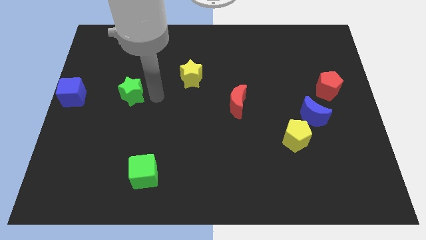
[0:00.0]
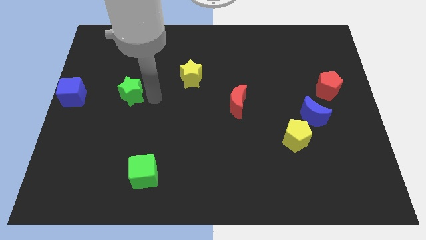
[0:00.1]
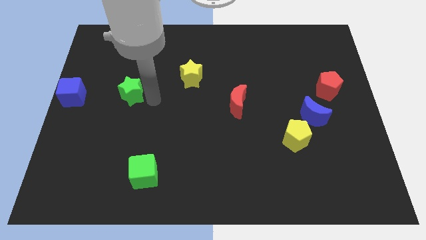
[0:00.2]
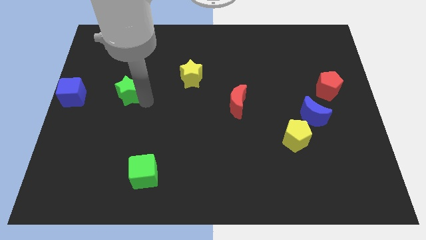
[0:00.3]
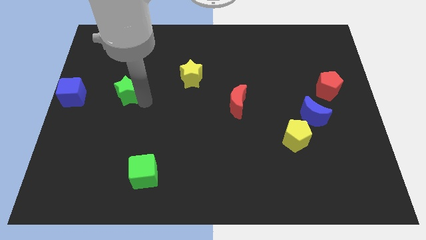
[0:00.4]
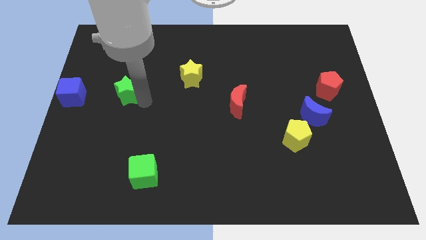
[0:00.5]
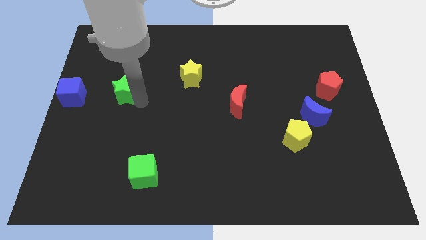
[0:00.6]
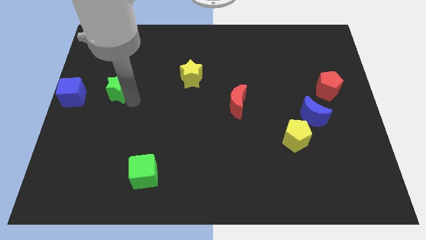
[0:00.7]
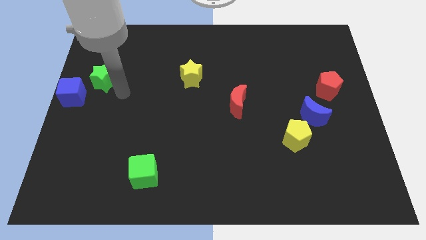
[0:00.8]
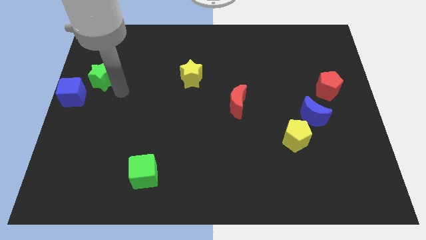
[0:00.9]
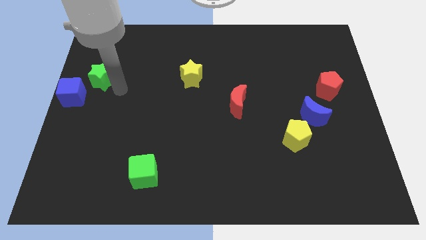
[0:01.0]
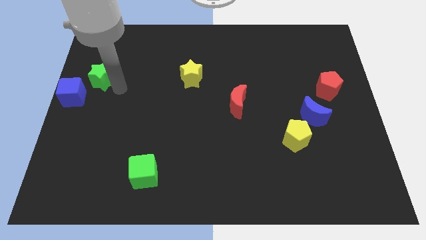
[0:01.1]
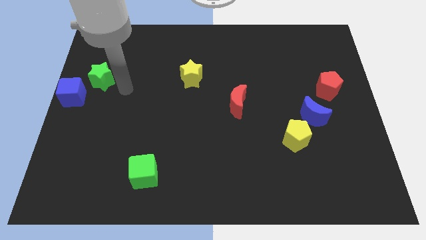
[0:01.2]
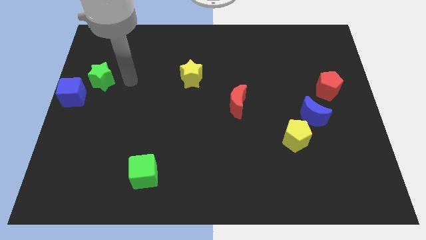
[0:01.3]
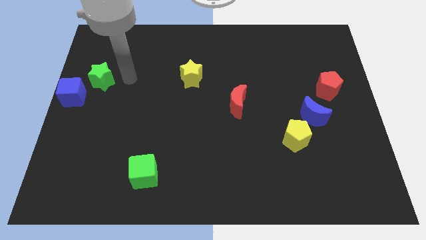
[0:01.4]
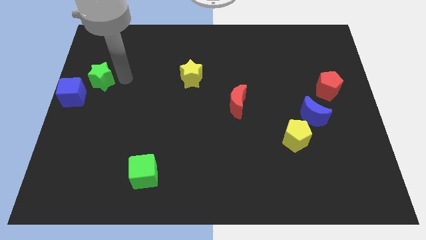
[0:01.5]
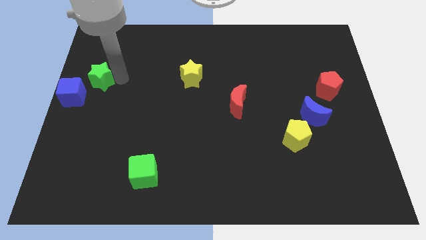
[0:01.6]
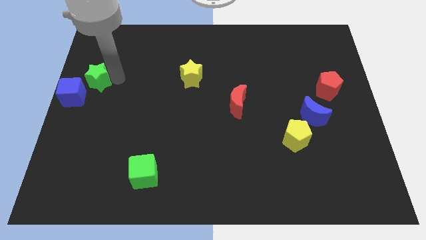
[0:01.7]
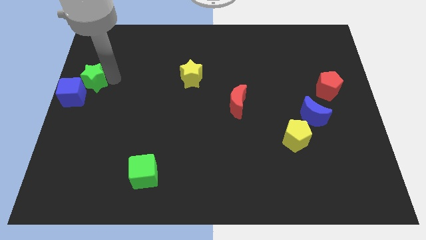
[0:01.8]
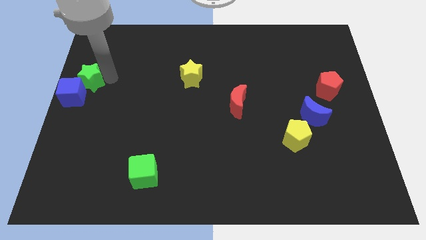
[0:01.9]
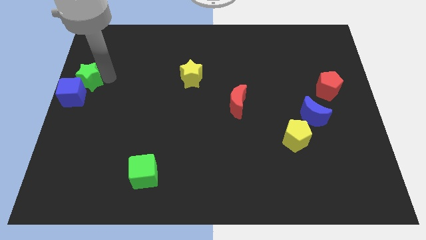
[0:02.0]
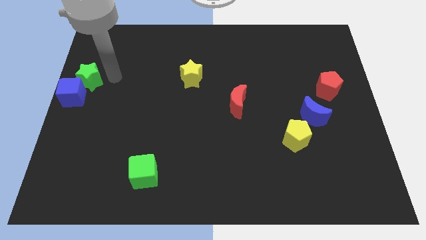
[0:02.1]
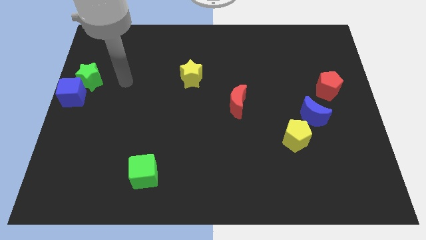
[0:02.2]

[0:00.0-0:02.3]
push the green star to the top right of blue cube

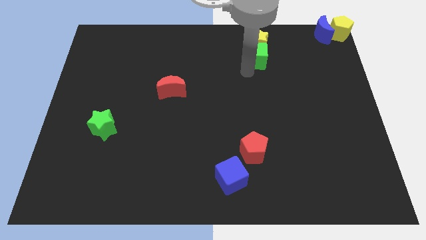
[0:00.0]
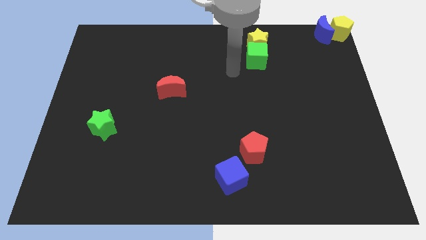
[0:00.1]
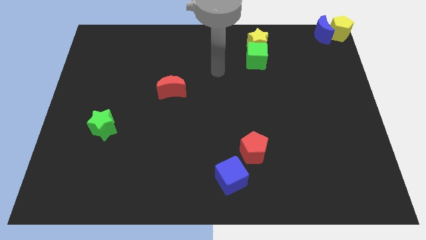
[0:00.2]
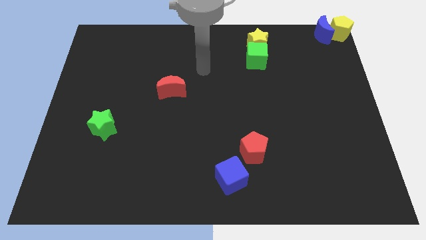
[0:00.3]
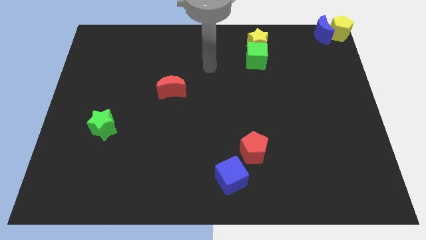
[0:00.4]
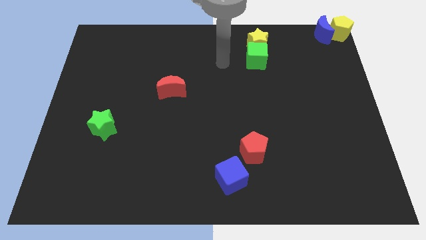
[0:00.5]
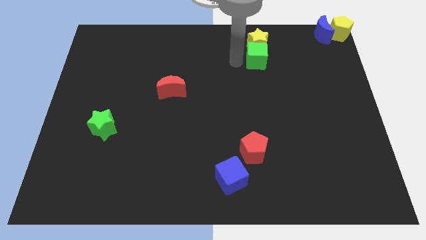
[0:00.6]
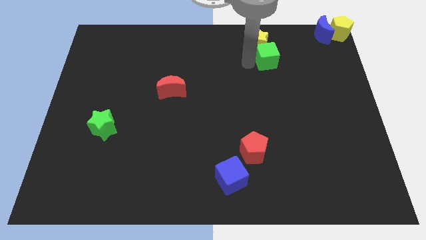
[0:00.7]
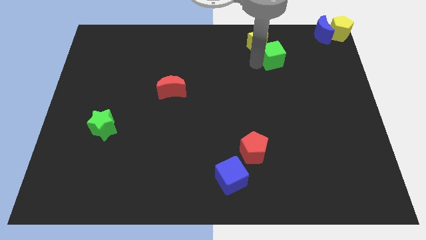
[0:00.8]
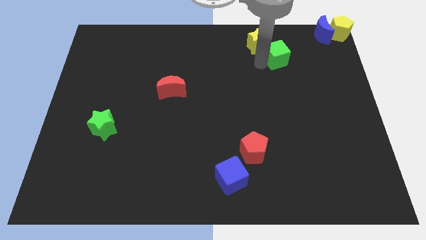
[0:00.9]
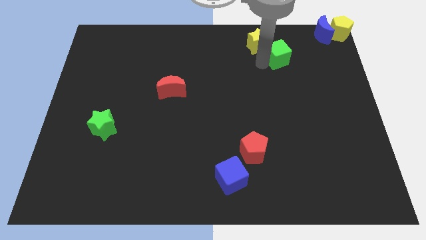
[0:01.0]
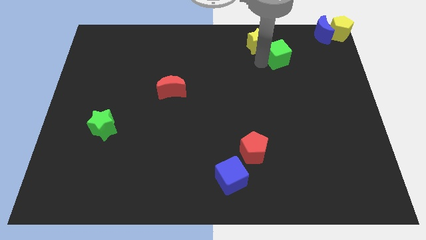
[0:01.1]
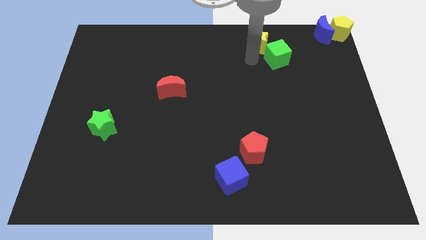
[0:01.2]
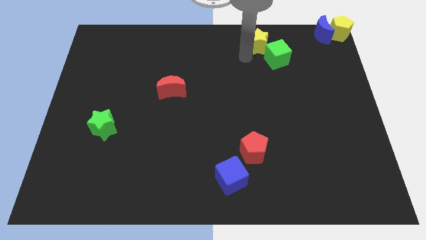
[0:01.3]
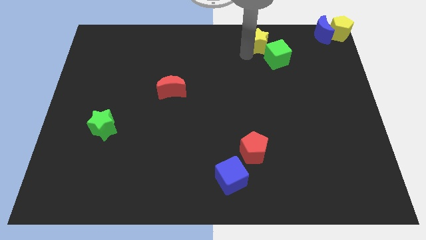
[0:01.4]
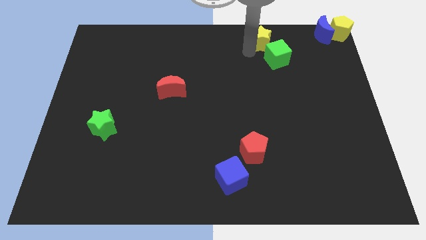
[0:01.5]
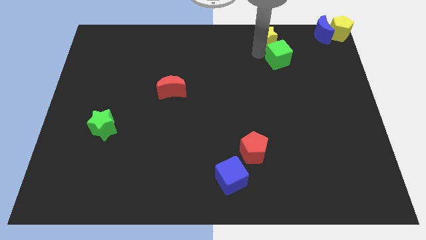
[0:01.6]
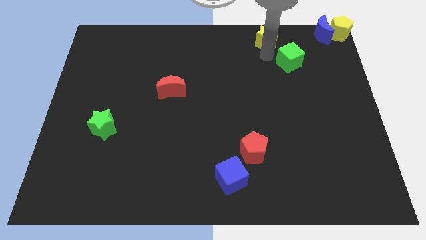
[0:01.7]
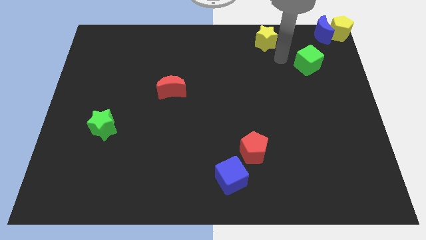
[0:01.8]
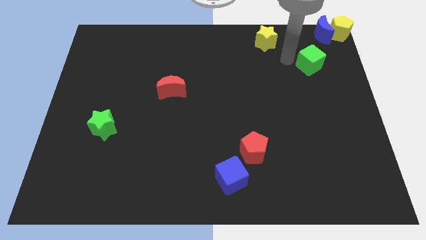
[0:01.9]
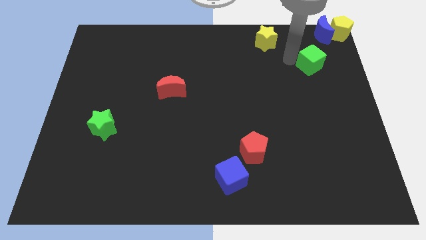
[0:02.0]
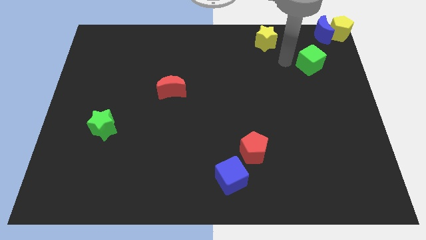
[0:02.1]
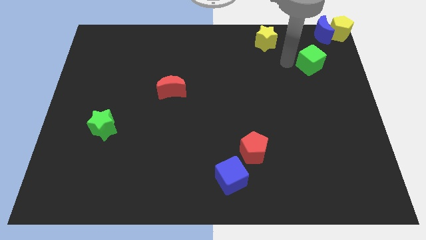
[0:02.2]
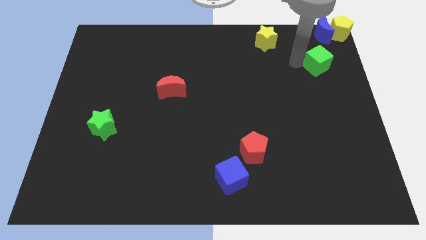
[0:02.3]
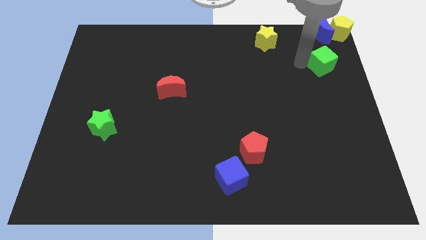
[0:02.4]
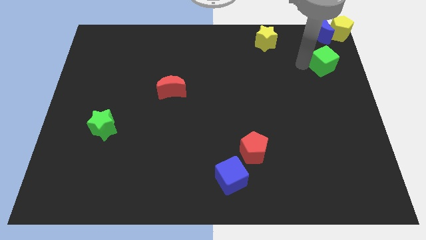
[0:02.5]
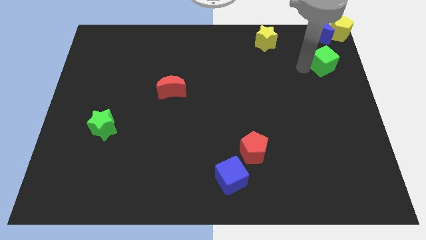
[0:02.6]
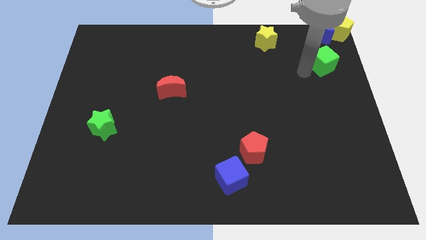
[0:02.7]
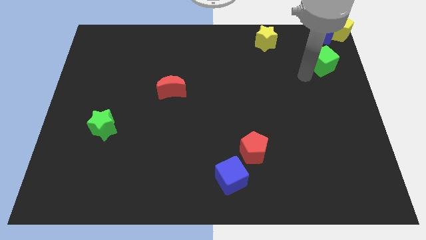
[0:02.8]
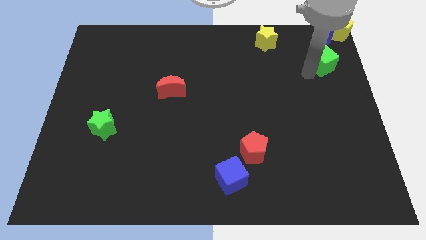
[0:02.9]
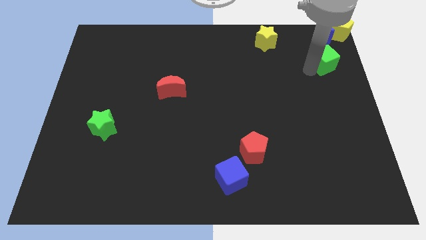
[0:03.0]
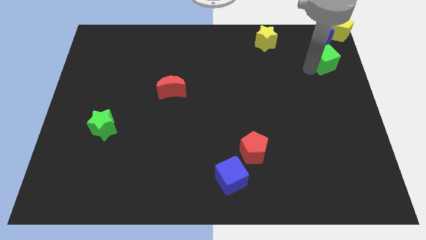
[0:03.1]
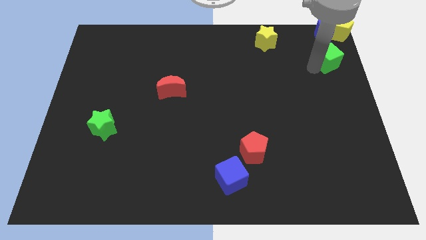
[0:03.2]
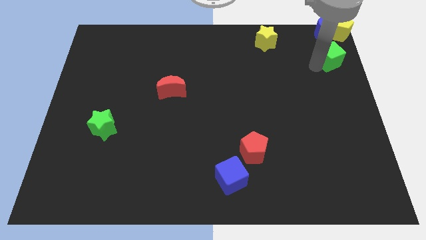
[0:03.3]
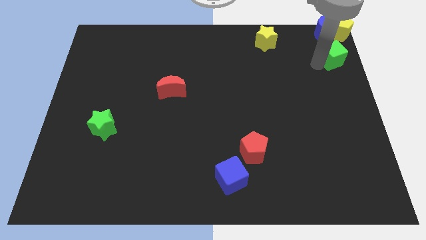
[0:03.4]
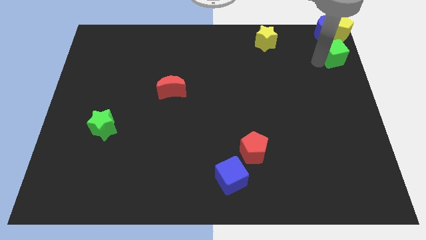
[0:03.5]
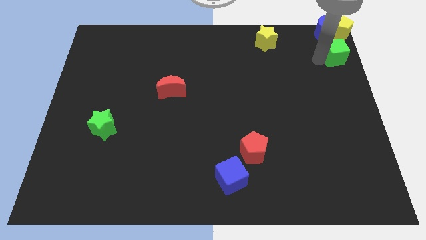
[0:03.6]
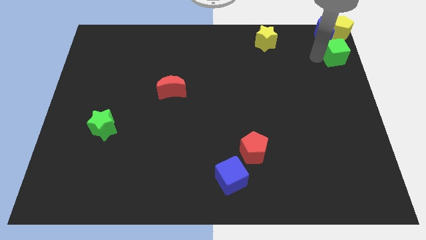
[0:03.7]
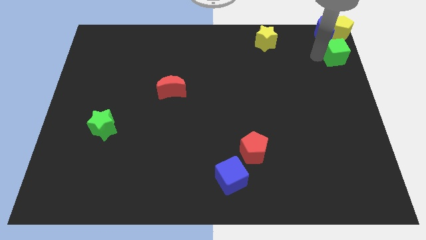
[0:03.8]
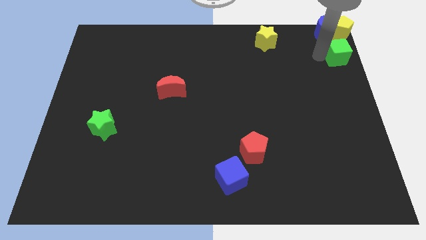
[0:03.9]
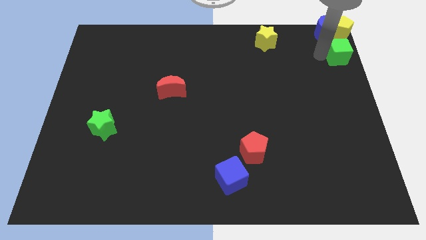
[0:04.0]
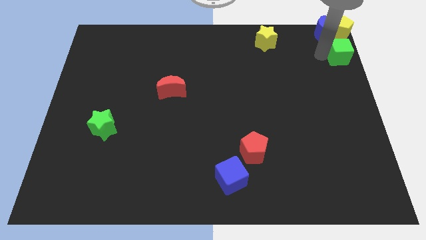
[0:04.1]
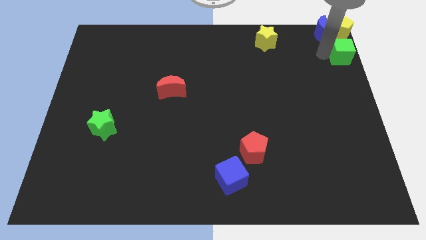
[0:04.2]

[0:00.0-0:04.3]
place the green cube down to the yellow pentagon

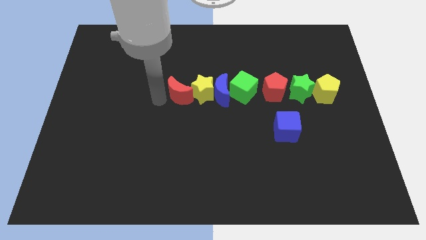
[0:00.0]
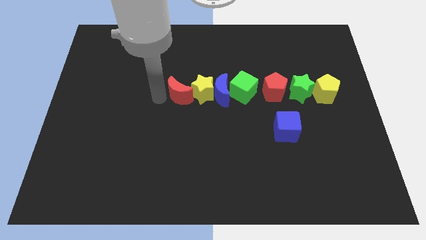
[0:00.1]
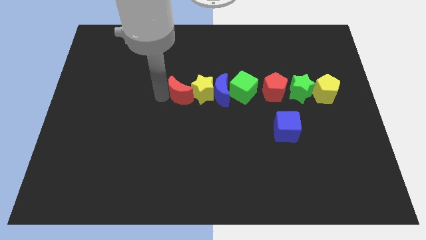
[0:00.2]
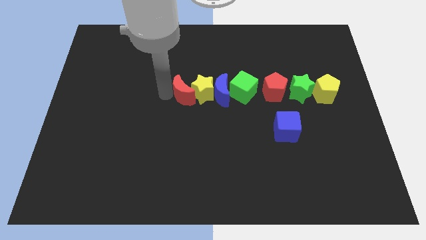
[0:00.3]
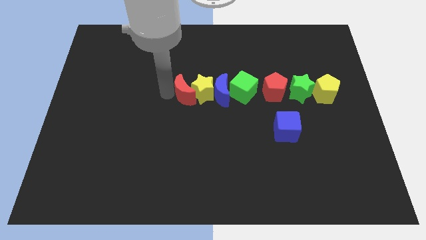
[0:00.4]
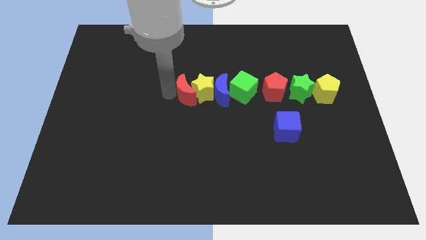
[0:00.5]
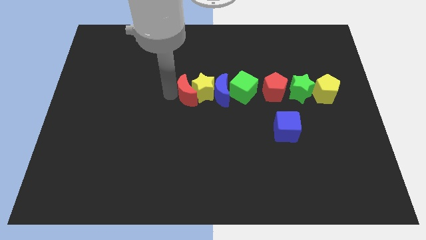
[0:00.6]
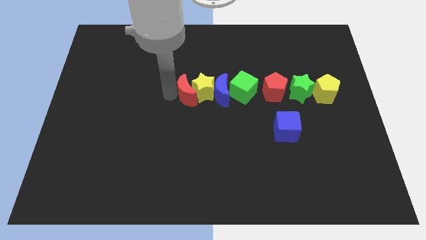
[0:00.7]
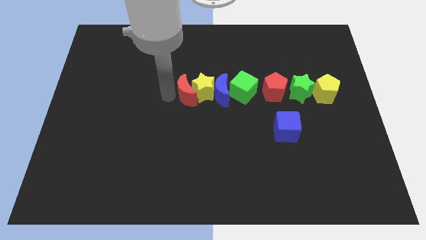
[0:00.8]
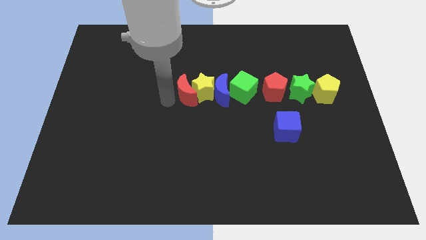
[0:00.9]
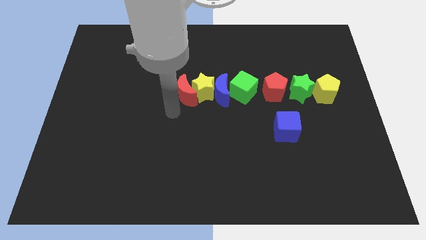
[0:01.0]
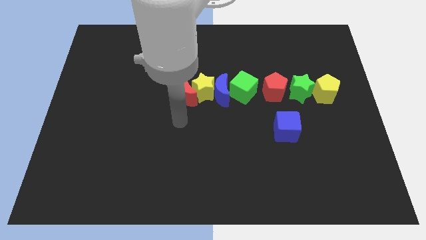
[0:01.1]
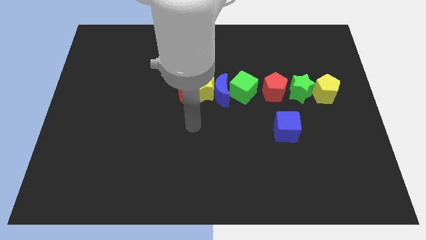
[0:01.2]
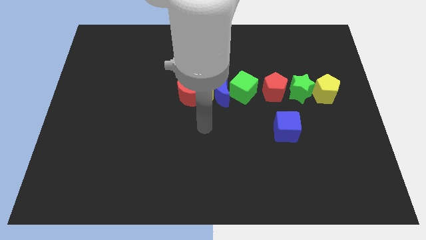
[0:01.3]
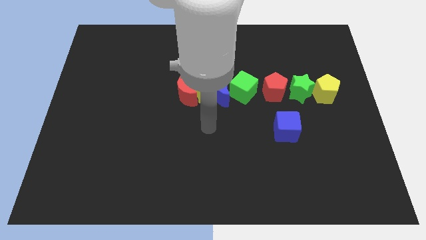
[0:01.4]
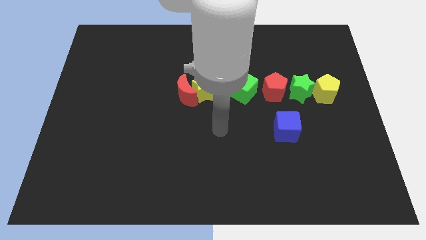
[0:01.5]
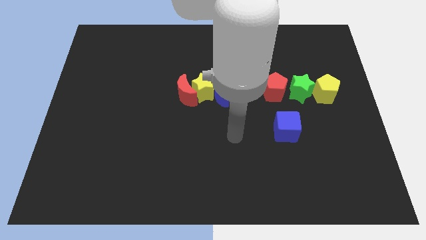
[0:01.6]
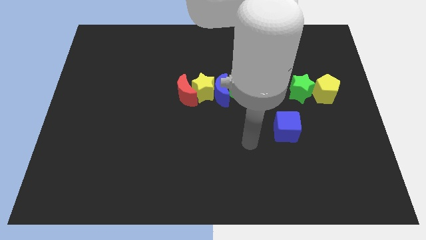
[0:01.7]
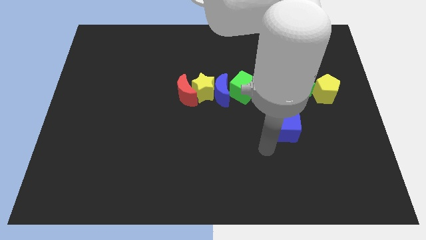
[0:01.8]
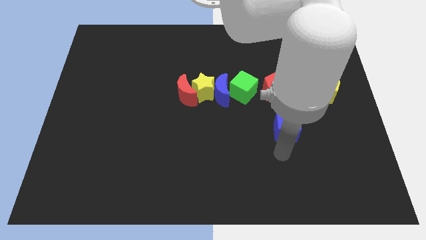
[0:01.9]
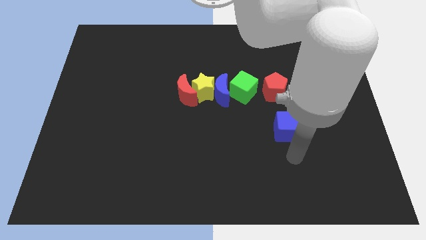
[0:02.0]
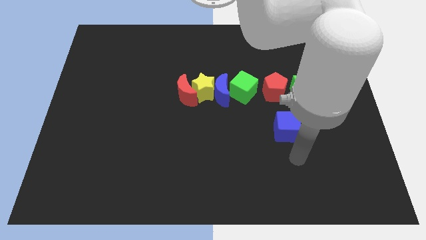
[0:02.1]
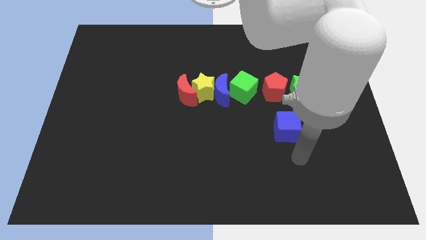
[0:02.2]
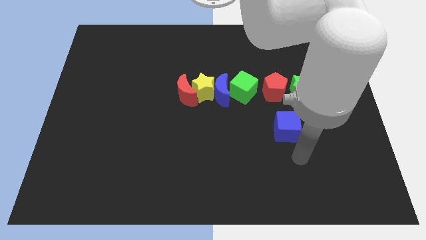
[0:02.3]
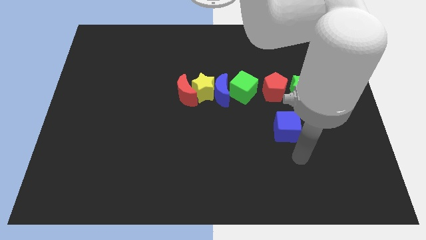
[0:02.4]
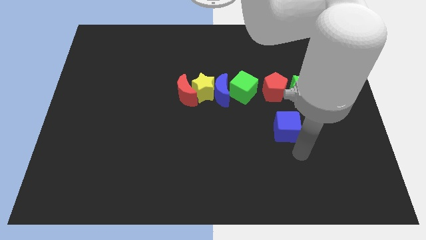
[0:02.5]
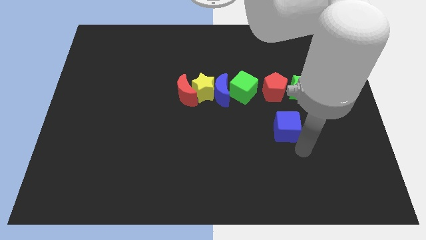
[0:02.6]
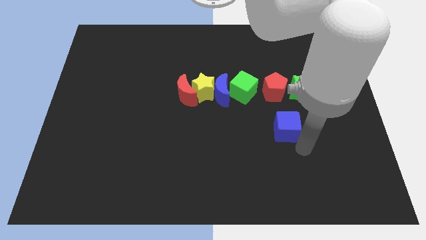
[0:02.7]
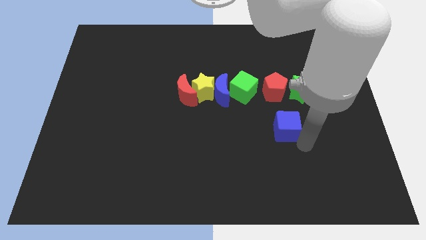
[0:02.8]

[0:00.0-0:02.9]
move the arm bottom right to the blue cube
